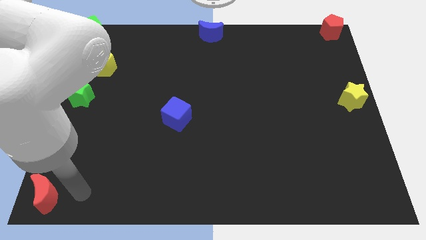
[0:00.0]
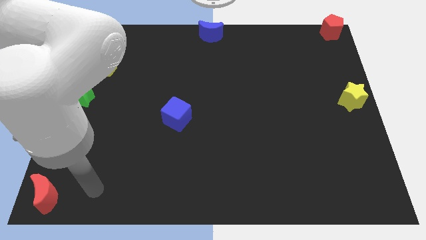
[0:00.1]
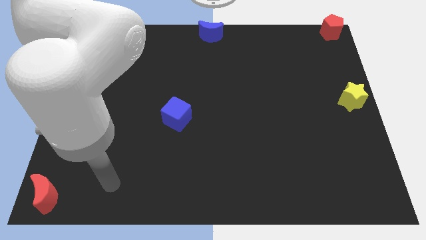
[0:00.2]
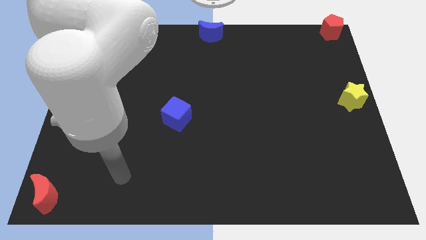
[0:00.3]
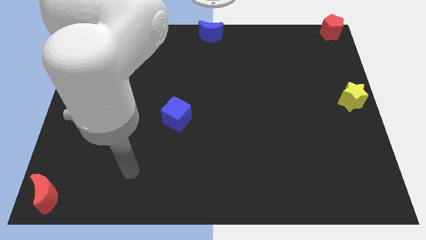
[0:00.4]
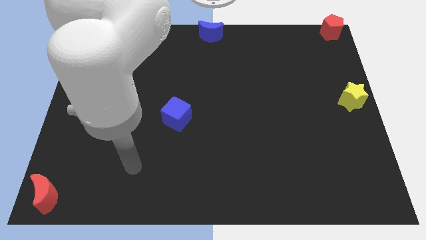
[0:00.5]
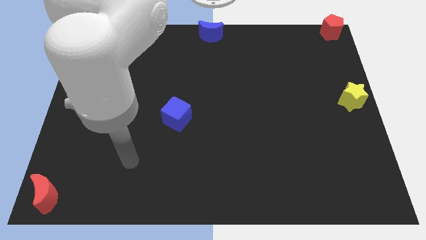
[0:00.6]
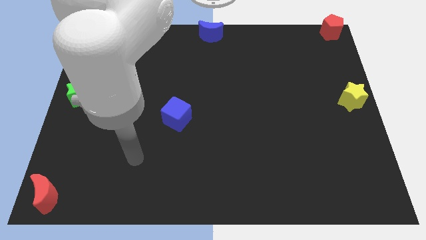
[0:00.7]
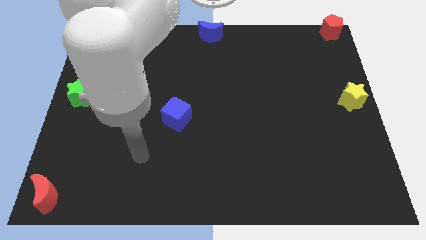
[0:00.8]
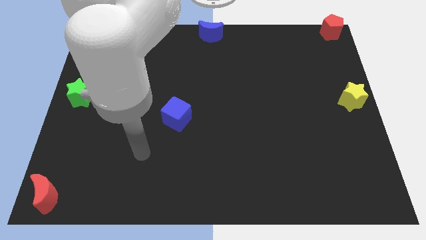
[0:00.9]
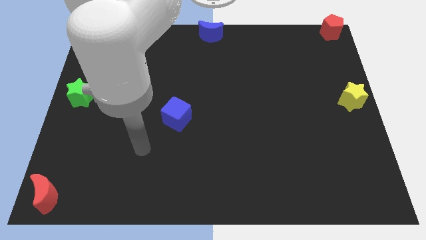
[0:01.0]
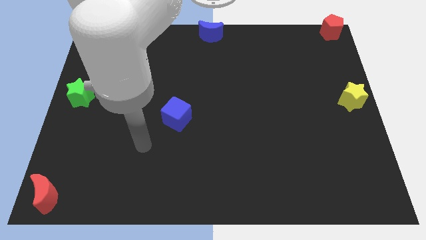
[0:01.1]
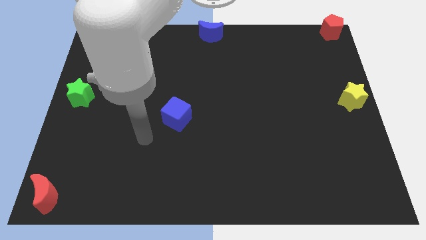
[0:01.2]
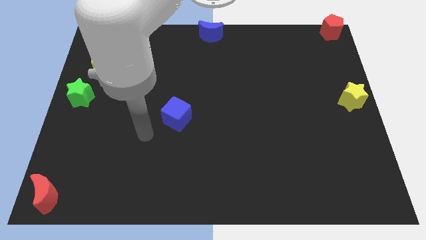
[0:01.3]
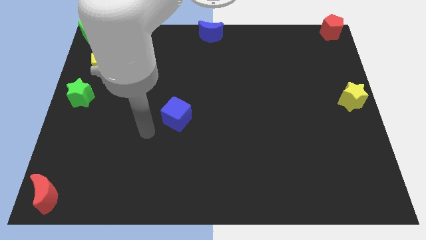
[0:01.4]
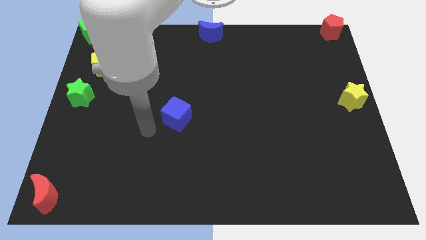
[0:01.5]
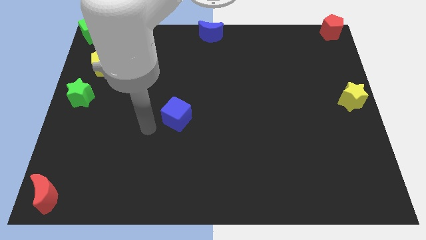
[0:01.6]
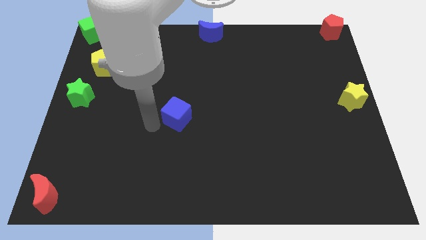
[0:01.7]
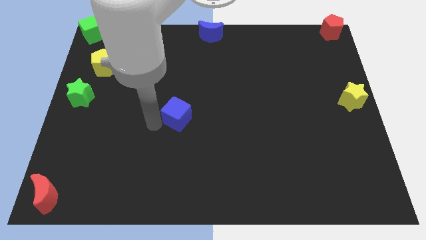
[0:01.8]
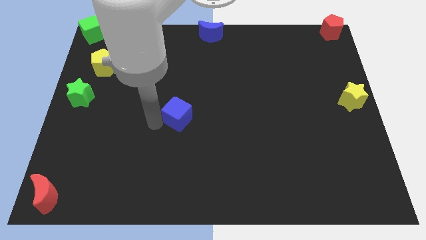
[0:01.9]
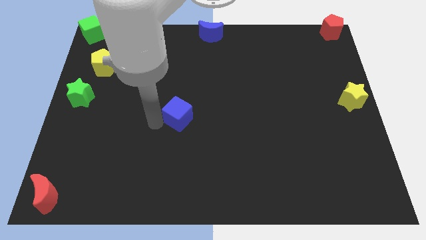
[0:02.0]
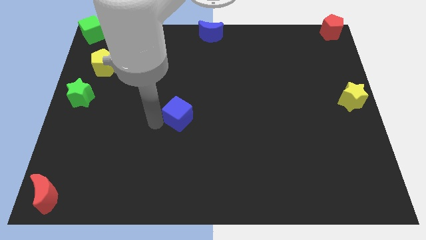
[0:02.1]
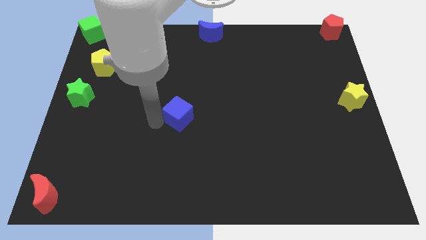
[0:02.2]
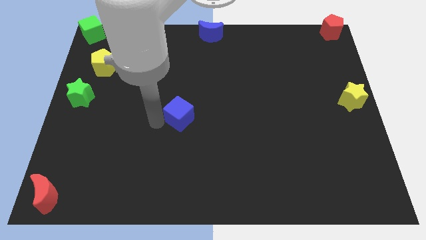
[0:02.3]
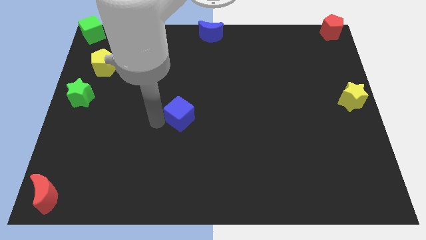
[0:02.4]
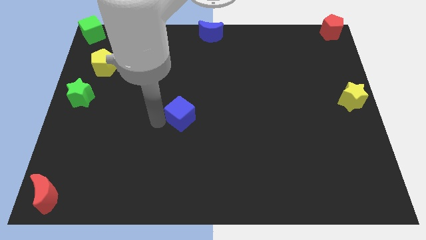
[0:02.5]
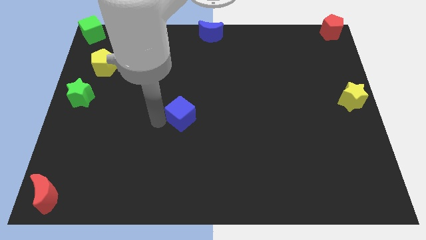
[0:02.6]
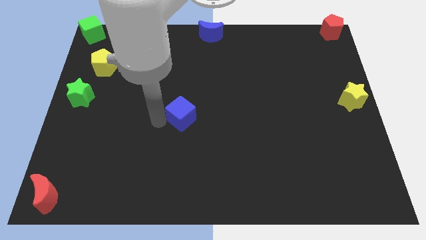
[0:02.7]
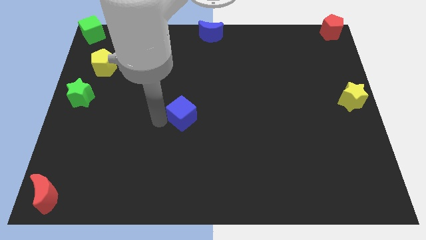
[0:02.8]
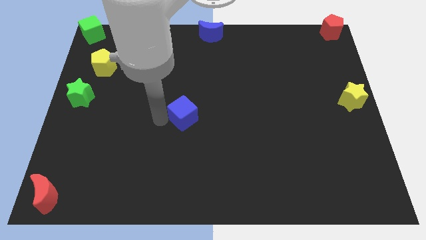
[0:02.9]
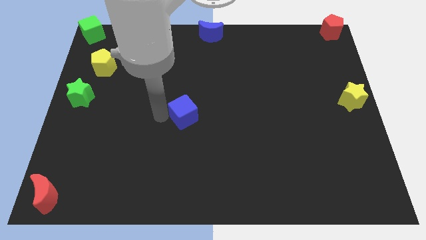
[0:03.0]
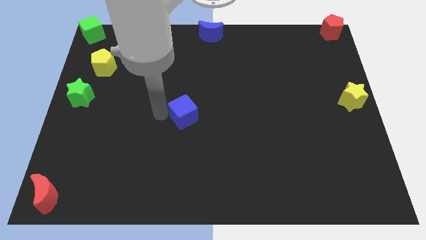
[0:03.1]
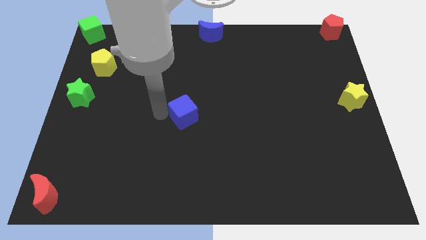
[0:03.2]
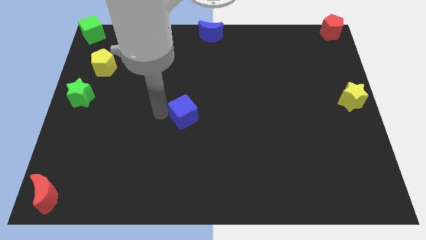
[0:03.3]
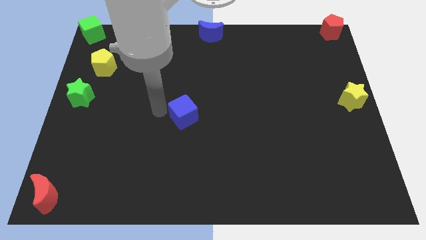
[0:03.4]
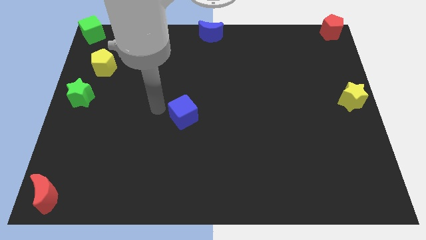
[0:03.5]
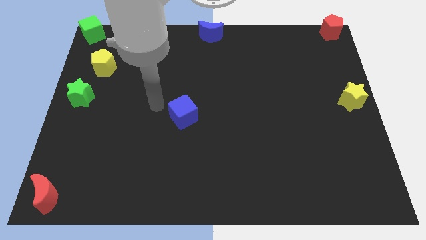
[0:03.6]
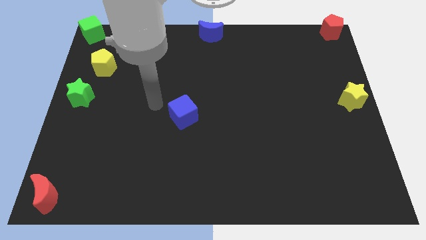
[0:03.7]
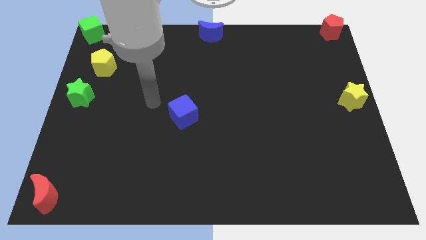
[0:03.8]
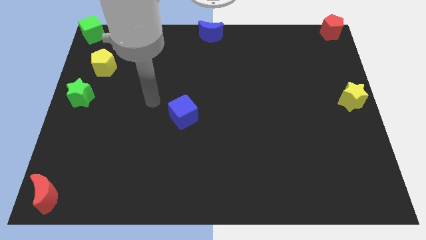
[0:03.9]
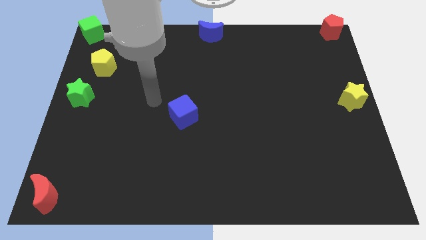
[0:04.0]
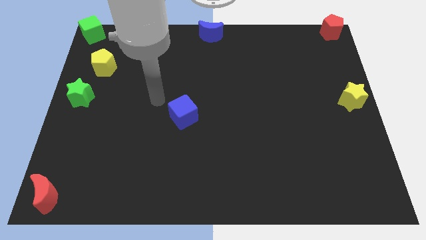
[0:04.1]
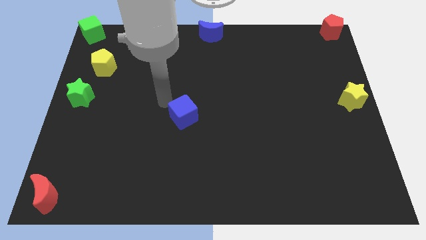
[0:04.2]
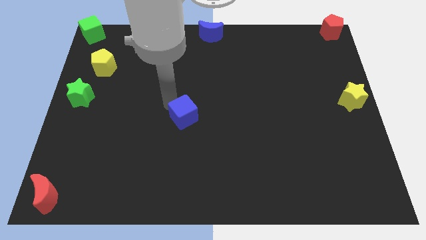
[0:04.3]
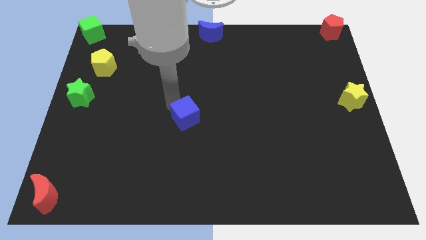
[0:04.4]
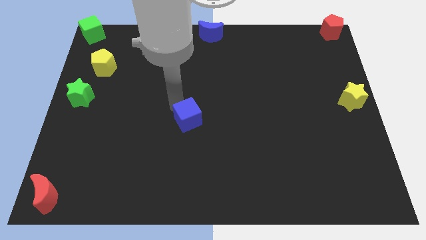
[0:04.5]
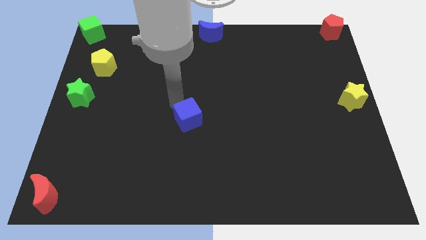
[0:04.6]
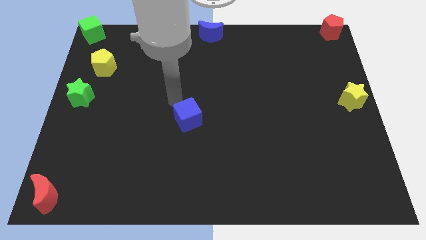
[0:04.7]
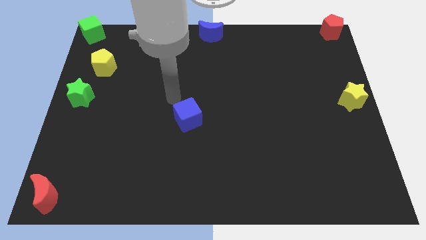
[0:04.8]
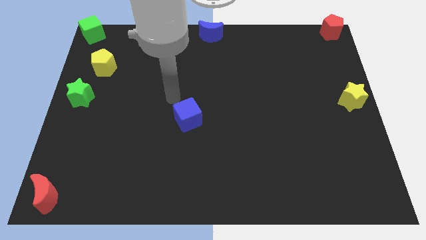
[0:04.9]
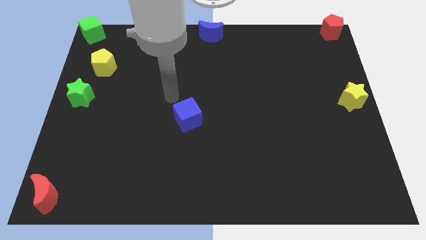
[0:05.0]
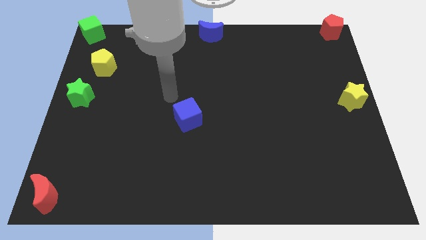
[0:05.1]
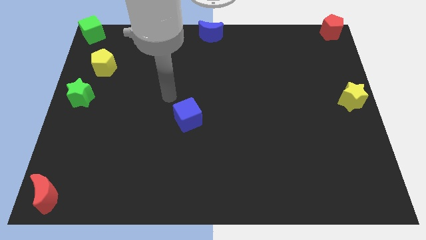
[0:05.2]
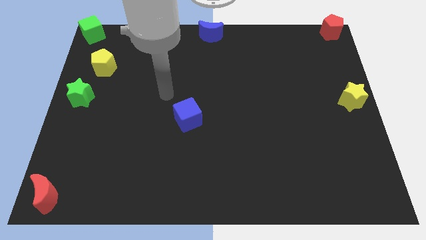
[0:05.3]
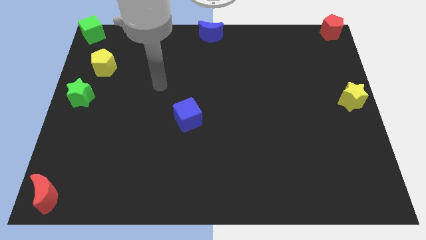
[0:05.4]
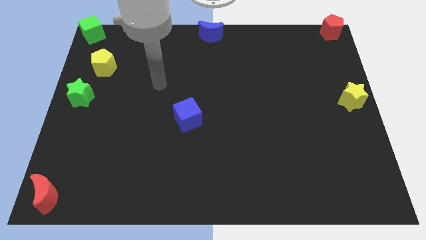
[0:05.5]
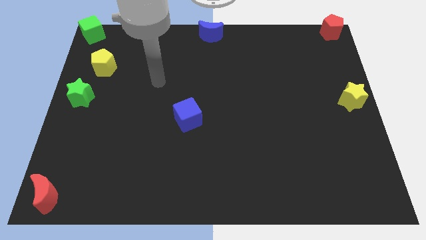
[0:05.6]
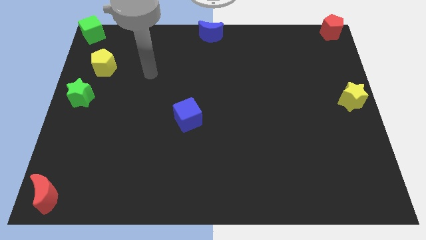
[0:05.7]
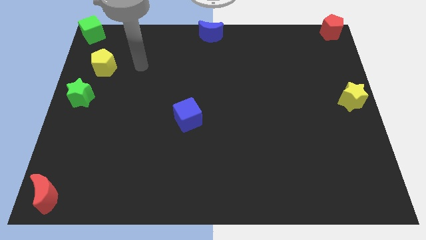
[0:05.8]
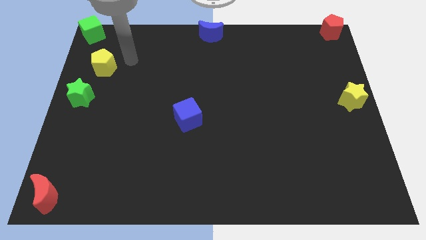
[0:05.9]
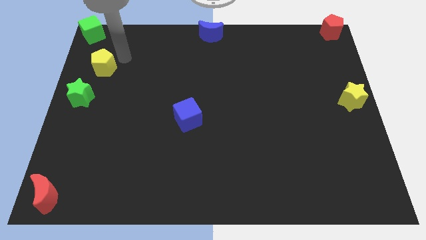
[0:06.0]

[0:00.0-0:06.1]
move the blue cube to the center of the board

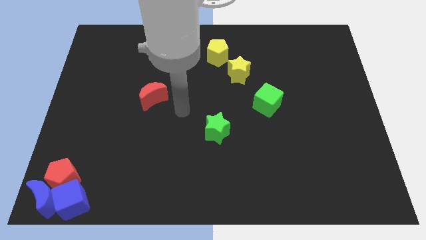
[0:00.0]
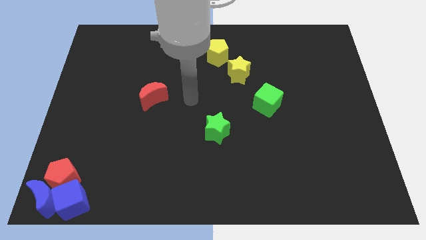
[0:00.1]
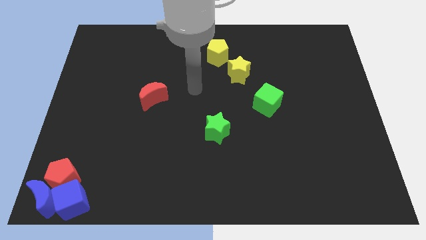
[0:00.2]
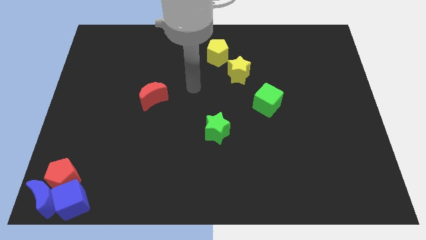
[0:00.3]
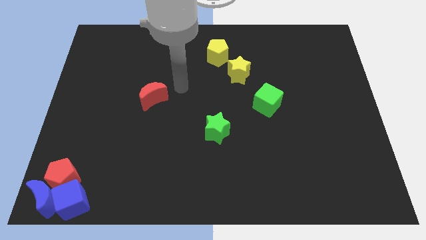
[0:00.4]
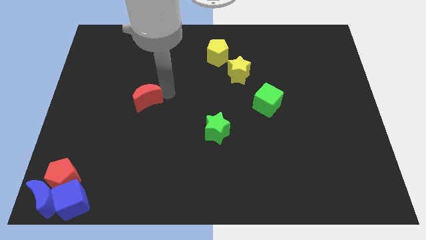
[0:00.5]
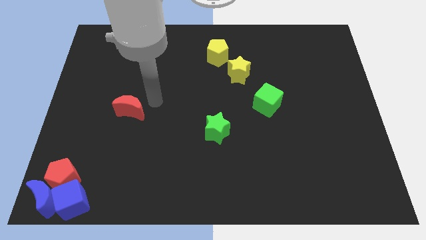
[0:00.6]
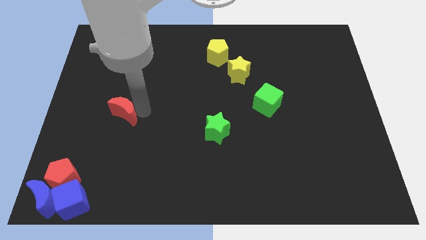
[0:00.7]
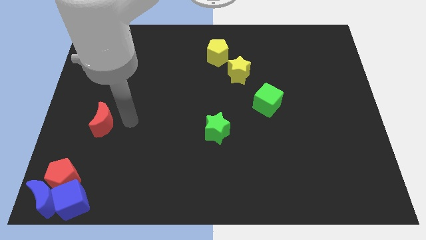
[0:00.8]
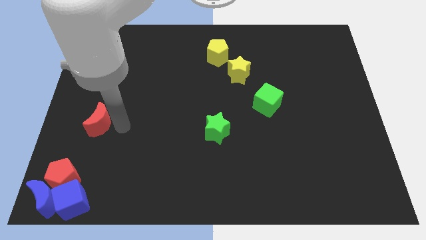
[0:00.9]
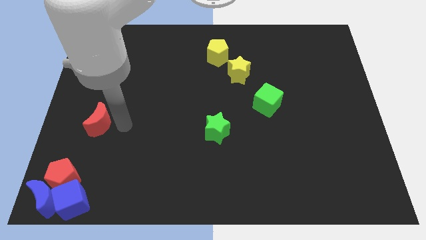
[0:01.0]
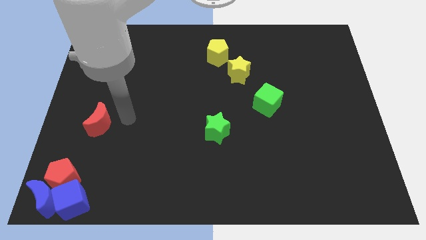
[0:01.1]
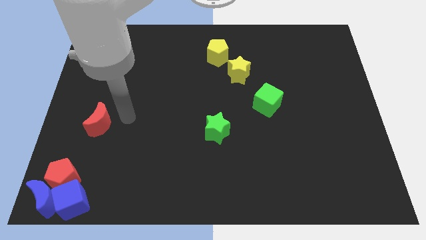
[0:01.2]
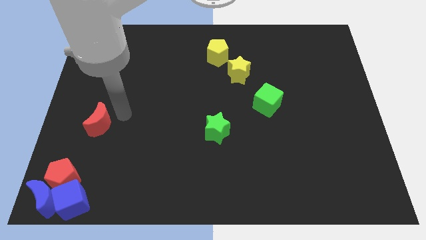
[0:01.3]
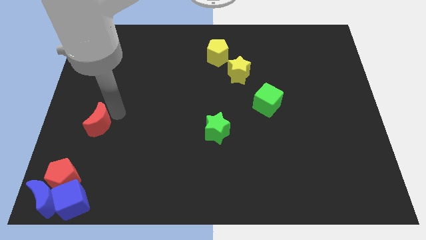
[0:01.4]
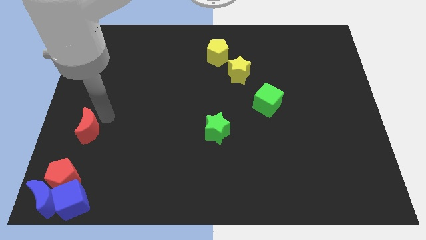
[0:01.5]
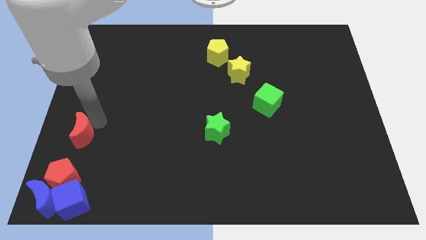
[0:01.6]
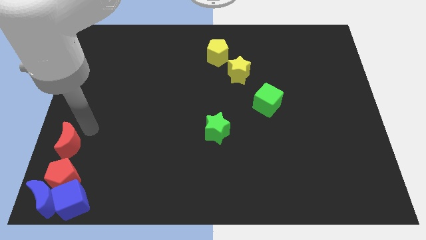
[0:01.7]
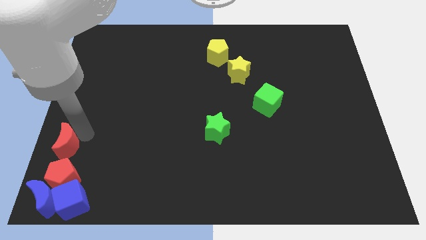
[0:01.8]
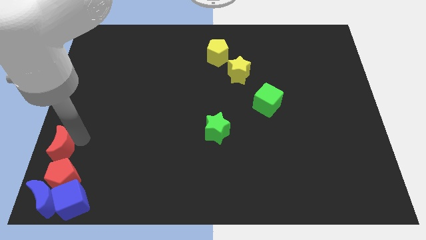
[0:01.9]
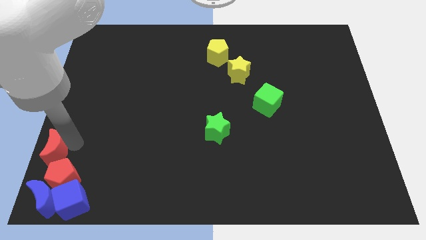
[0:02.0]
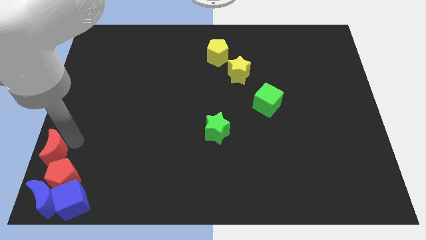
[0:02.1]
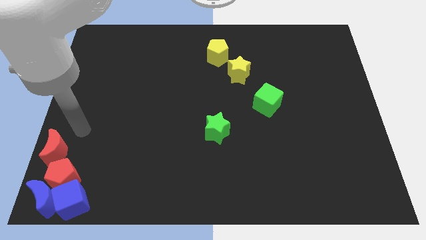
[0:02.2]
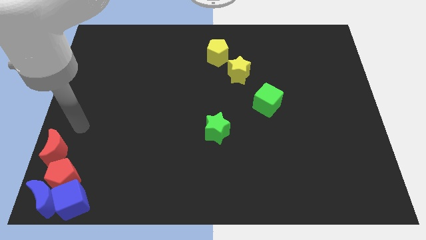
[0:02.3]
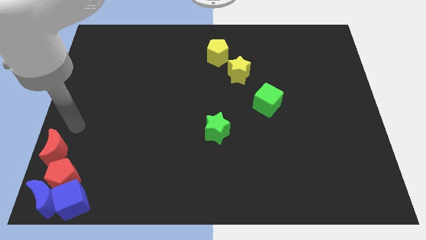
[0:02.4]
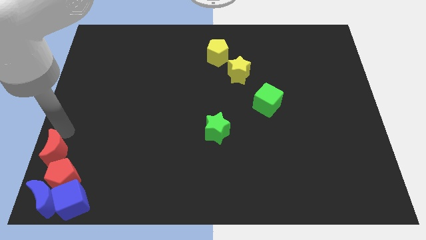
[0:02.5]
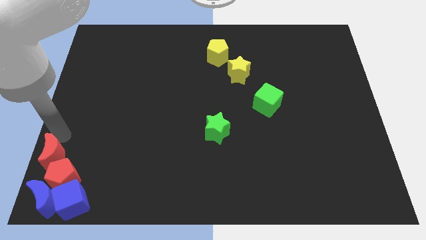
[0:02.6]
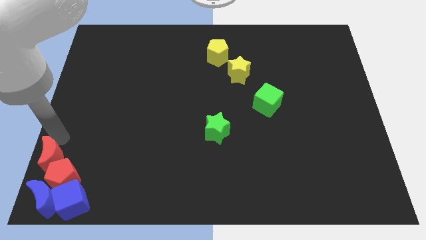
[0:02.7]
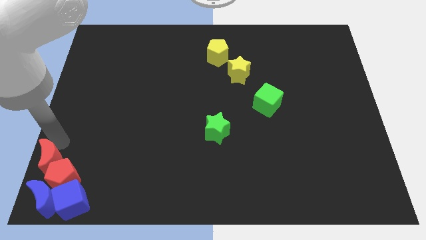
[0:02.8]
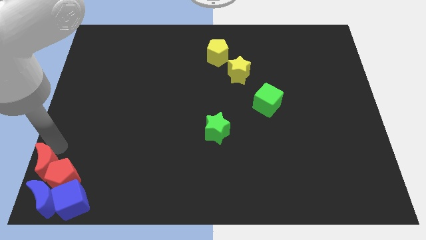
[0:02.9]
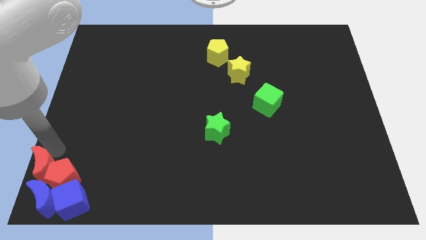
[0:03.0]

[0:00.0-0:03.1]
place red moon on top of blue moon
